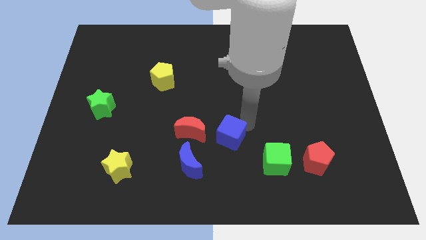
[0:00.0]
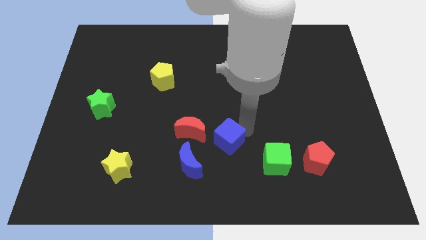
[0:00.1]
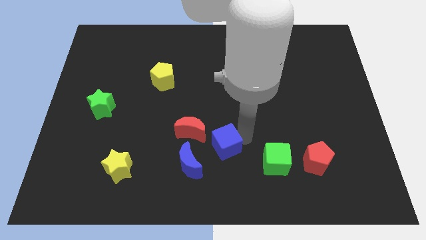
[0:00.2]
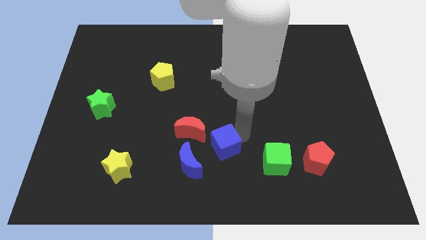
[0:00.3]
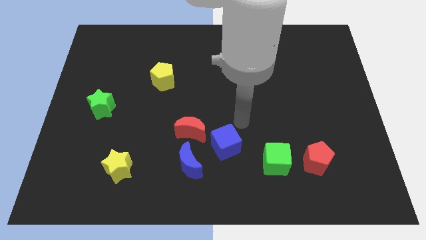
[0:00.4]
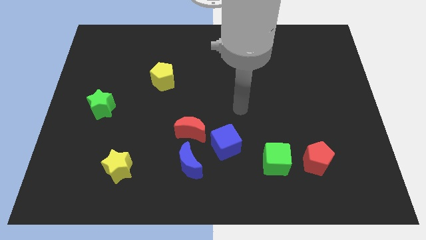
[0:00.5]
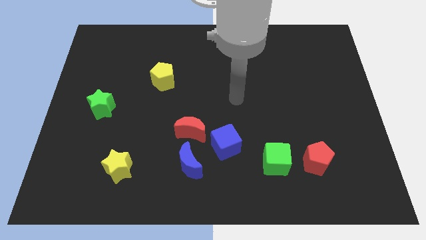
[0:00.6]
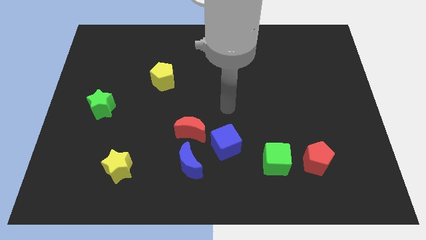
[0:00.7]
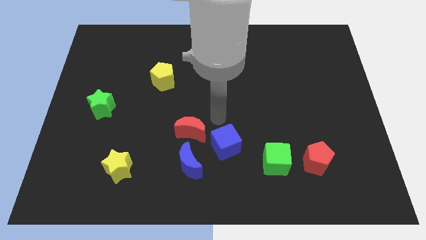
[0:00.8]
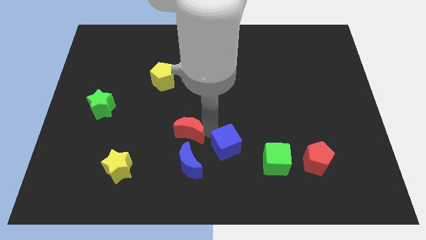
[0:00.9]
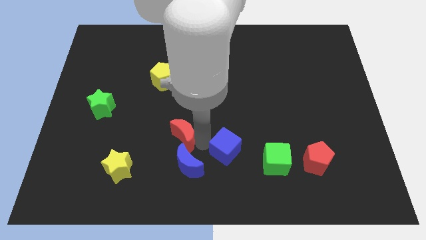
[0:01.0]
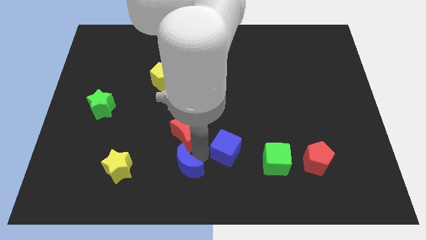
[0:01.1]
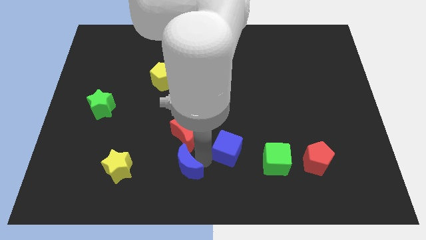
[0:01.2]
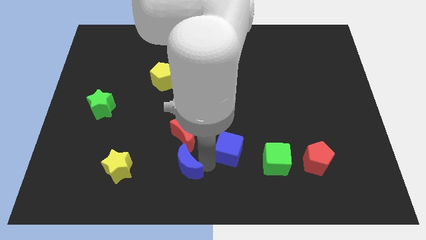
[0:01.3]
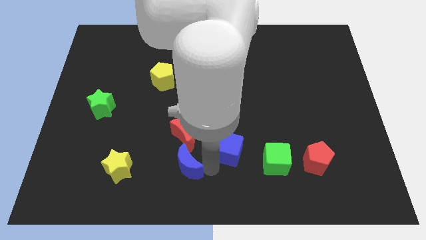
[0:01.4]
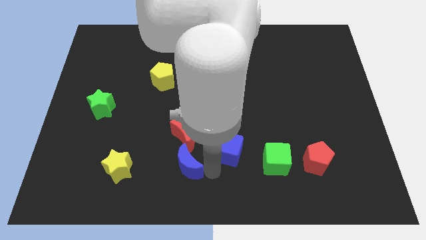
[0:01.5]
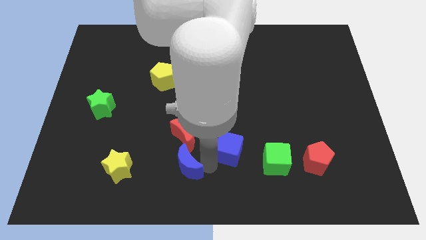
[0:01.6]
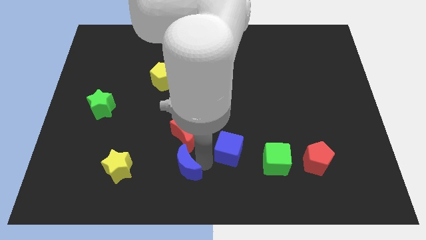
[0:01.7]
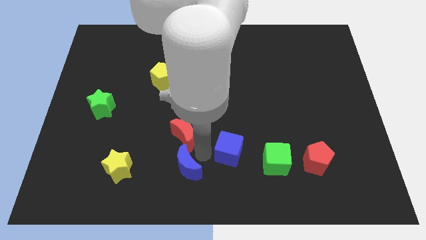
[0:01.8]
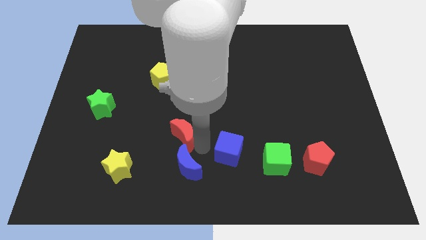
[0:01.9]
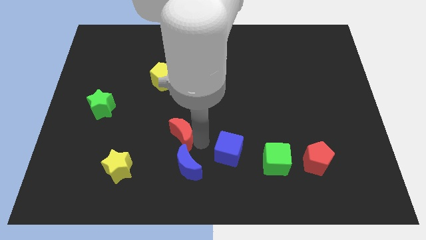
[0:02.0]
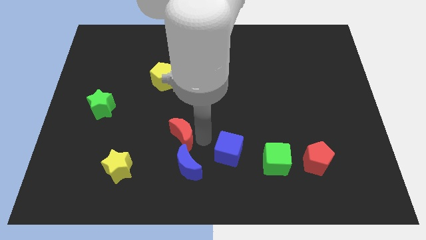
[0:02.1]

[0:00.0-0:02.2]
point arm beside red moon

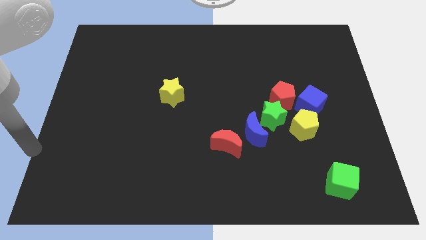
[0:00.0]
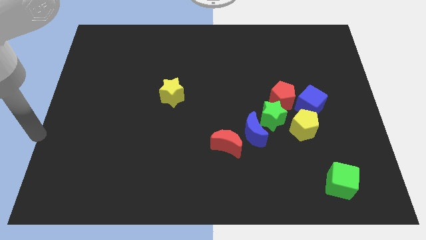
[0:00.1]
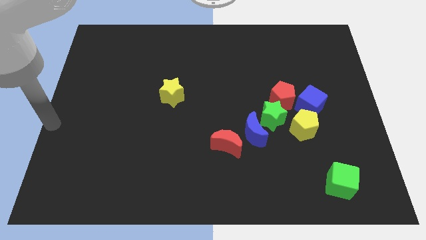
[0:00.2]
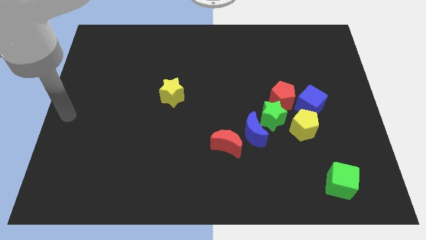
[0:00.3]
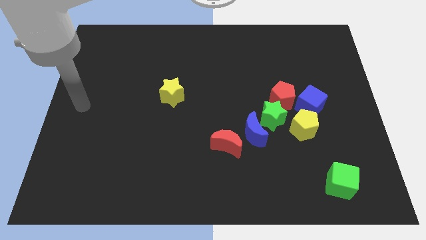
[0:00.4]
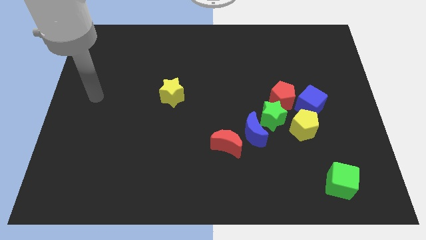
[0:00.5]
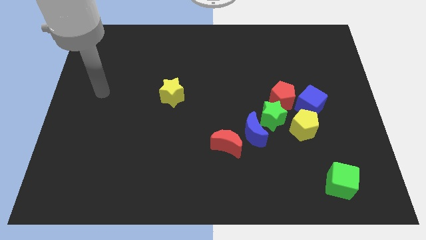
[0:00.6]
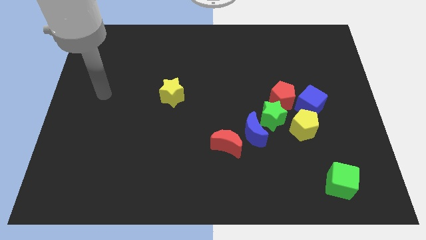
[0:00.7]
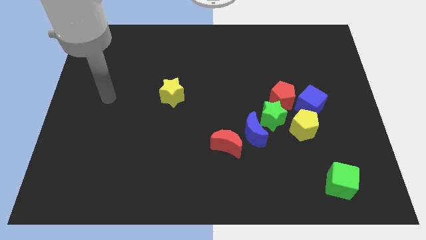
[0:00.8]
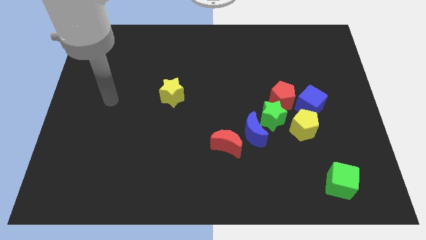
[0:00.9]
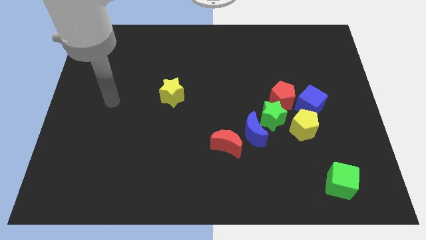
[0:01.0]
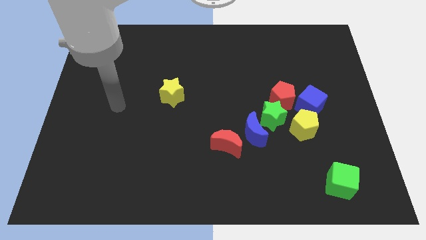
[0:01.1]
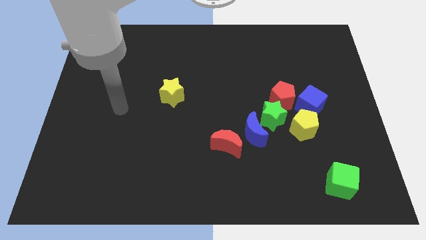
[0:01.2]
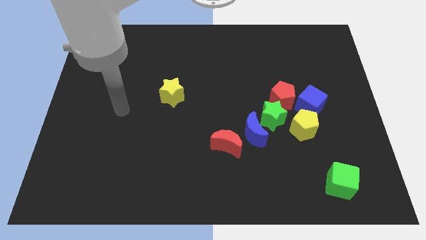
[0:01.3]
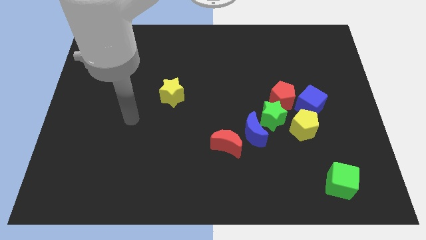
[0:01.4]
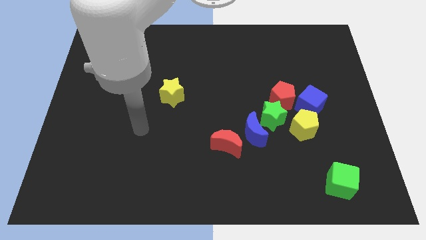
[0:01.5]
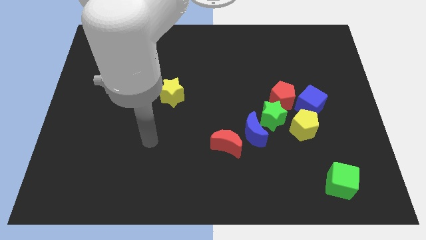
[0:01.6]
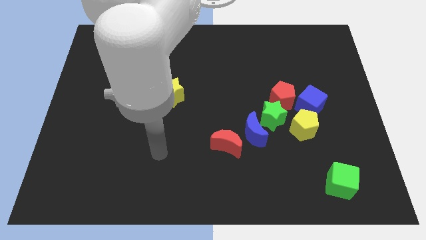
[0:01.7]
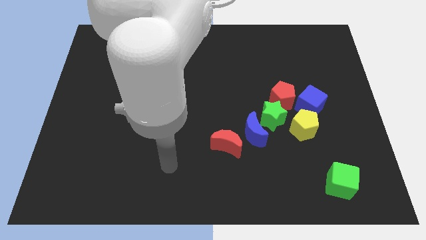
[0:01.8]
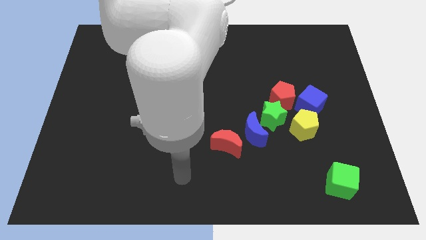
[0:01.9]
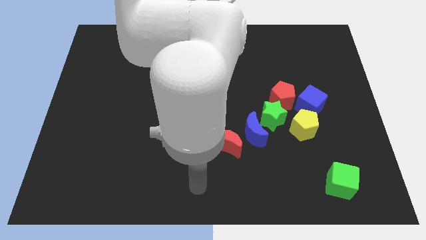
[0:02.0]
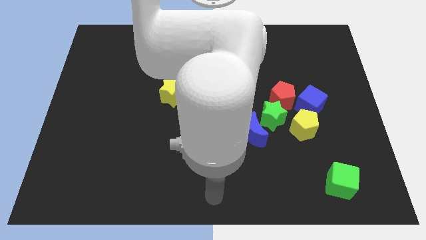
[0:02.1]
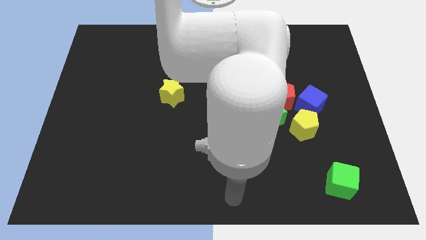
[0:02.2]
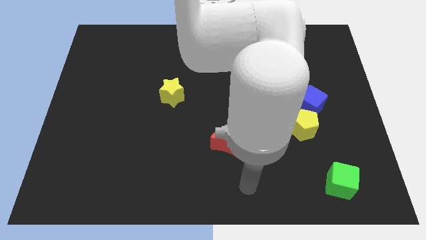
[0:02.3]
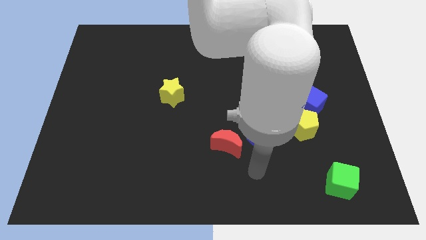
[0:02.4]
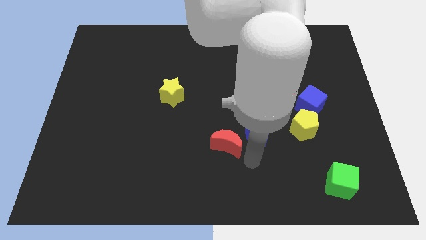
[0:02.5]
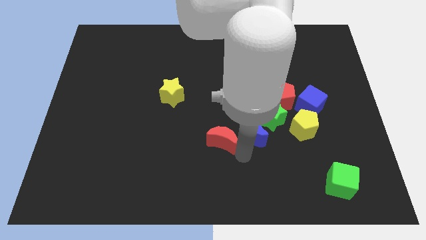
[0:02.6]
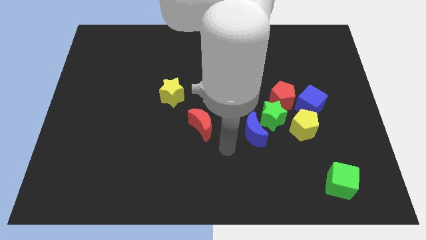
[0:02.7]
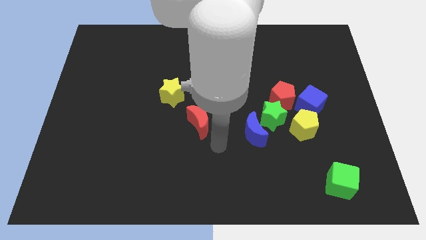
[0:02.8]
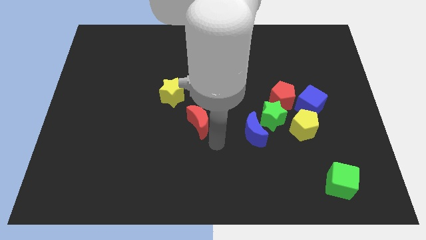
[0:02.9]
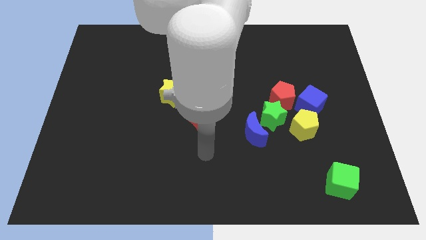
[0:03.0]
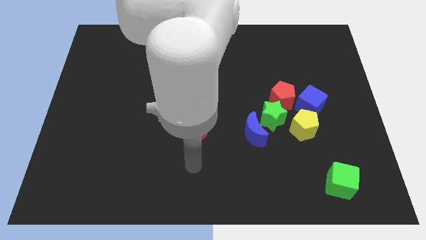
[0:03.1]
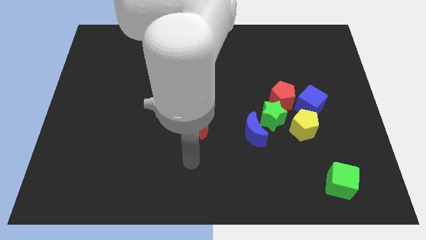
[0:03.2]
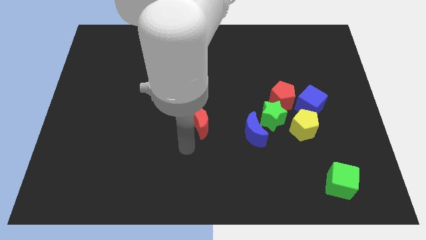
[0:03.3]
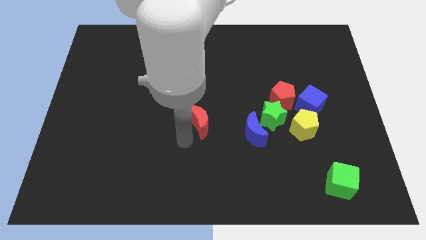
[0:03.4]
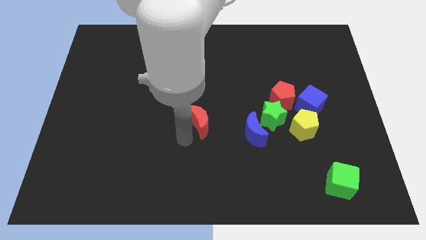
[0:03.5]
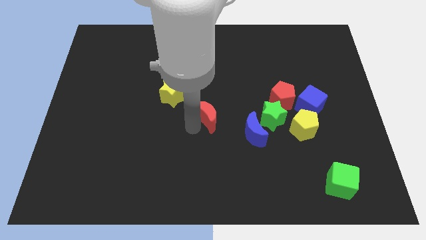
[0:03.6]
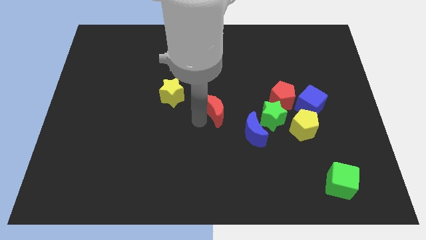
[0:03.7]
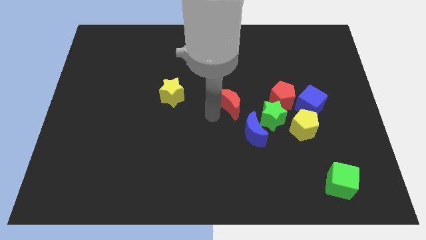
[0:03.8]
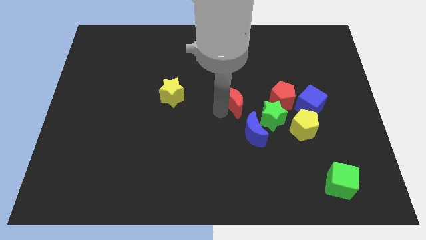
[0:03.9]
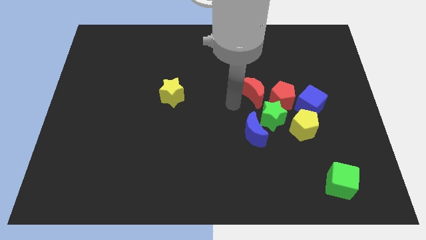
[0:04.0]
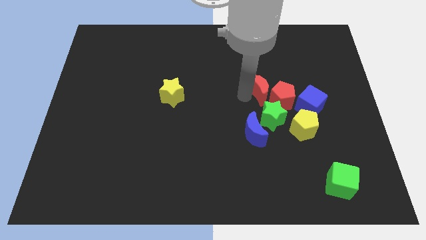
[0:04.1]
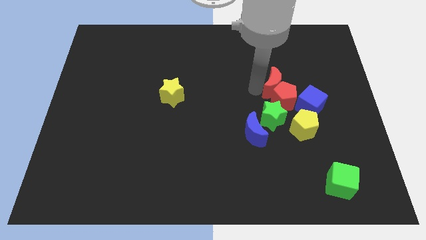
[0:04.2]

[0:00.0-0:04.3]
move the red crescent towards the red pentagon

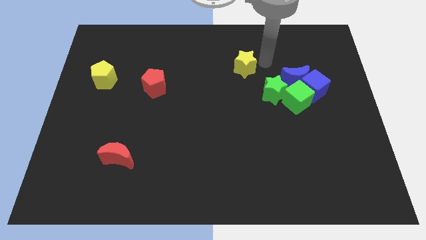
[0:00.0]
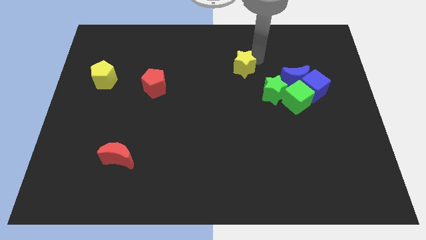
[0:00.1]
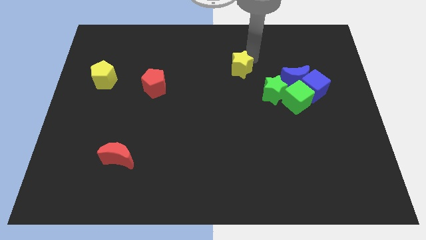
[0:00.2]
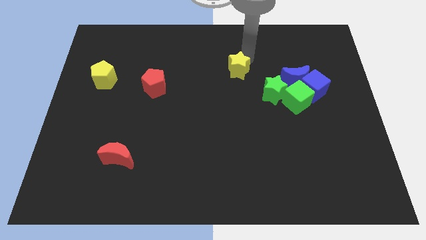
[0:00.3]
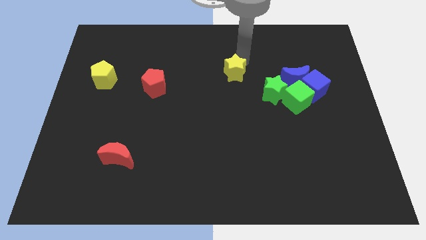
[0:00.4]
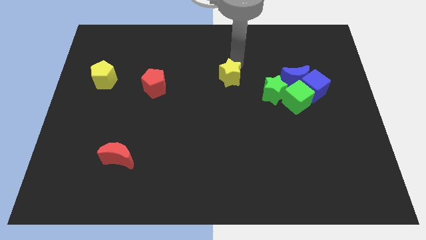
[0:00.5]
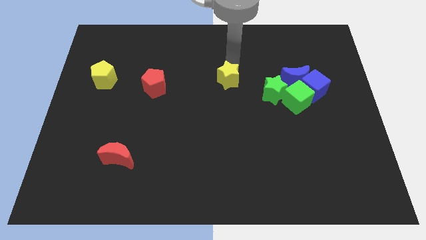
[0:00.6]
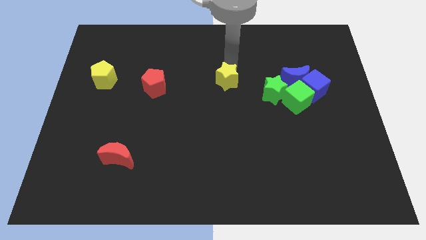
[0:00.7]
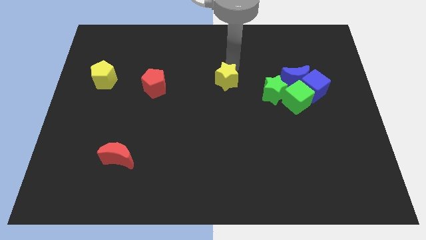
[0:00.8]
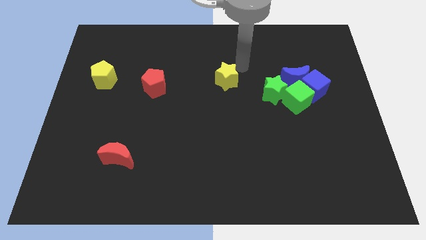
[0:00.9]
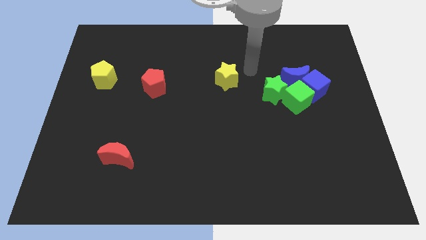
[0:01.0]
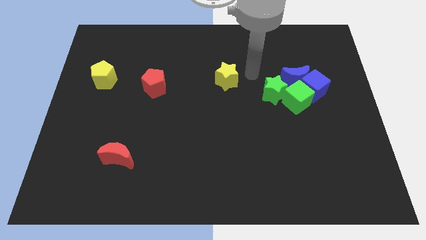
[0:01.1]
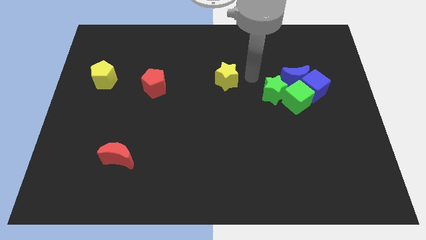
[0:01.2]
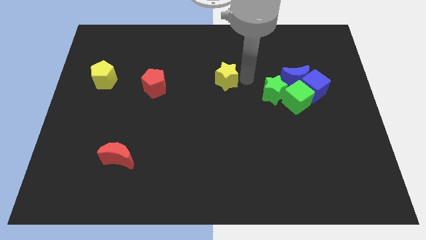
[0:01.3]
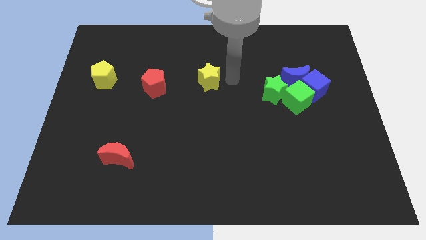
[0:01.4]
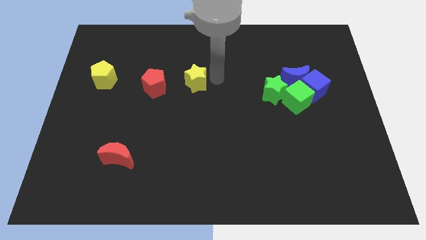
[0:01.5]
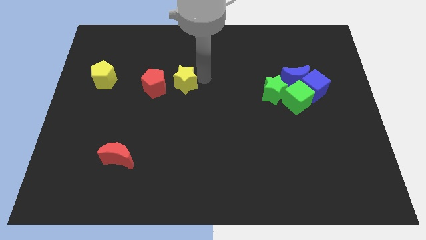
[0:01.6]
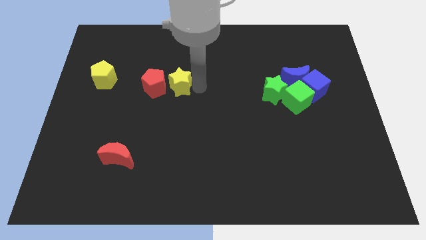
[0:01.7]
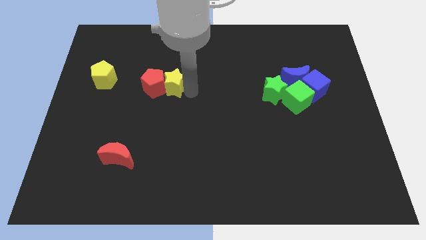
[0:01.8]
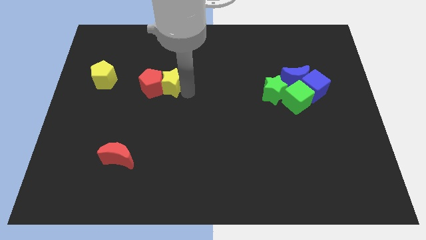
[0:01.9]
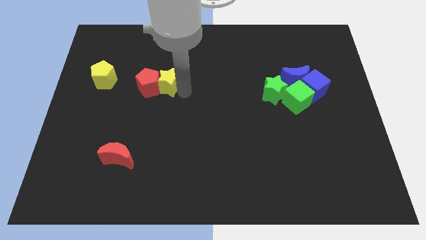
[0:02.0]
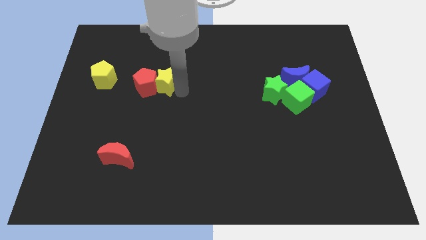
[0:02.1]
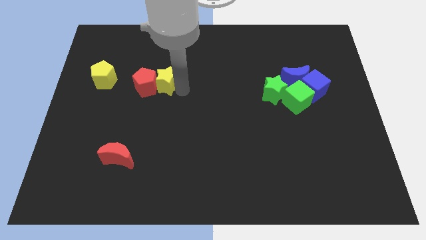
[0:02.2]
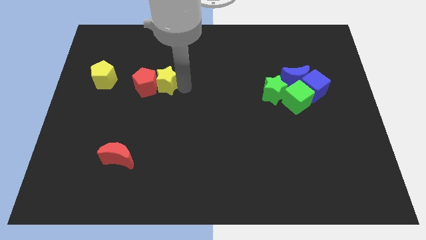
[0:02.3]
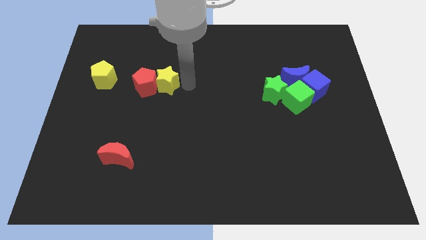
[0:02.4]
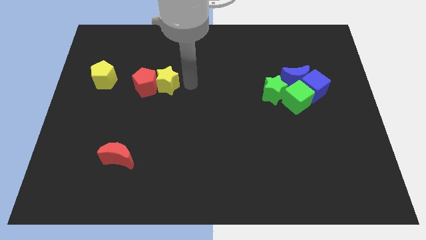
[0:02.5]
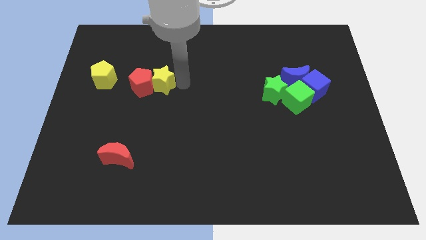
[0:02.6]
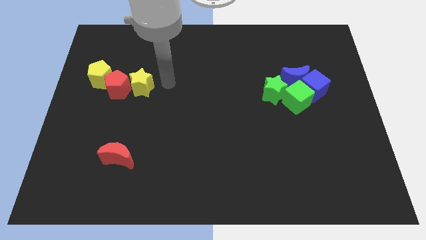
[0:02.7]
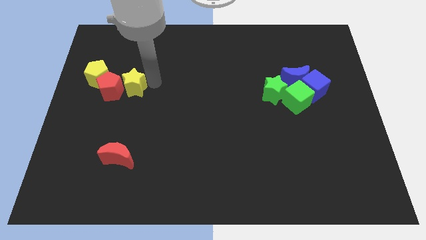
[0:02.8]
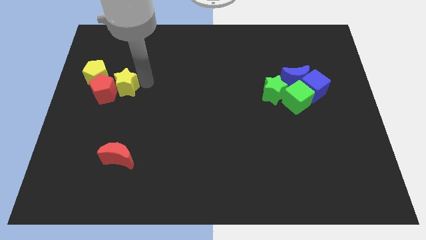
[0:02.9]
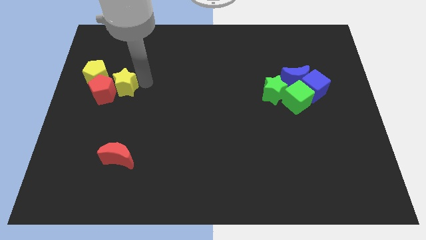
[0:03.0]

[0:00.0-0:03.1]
push yellow star in to red pentagon
